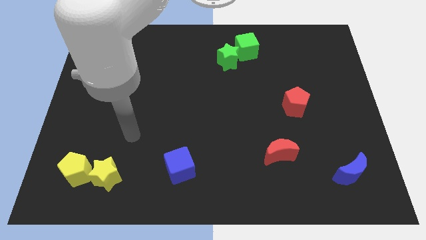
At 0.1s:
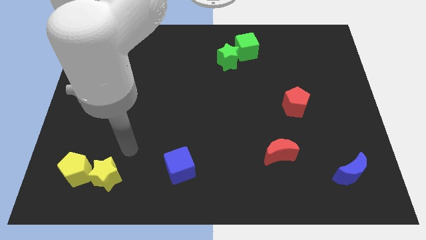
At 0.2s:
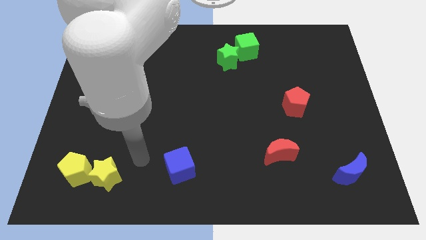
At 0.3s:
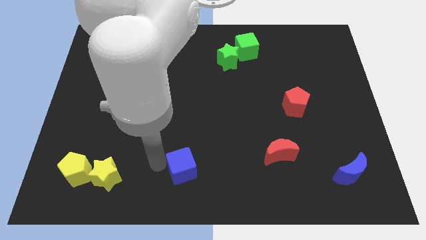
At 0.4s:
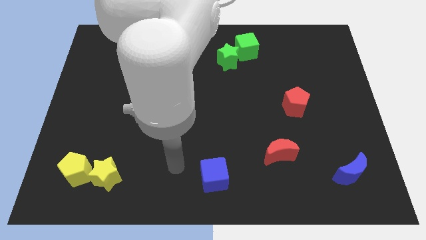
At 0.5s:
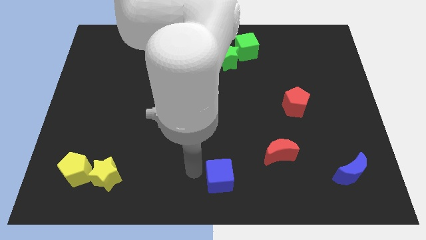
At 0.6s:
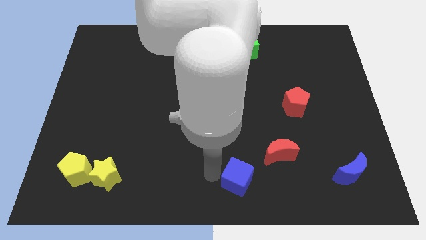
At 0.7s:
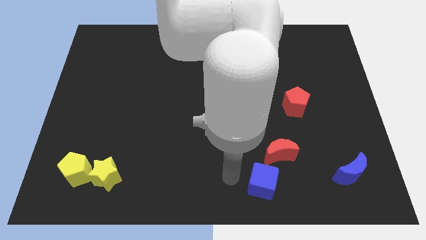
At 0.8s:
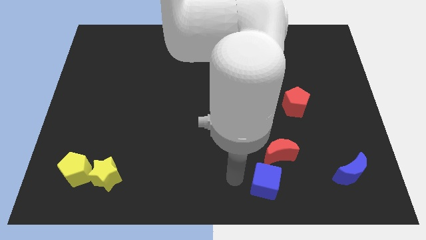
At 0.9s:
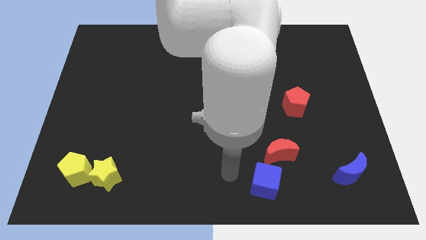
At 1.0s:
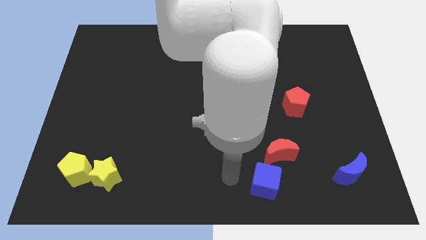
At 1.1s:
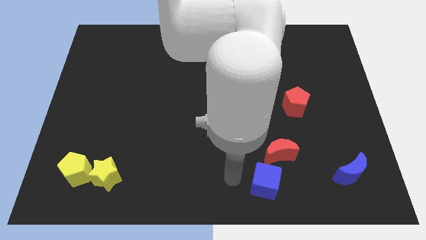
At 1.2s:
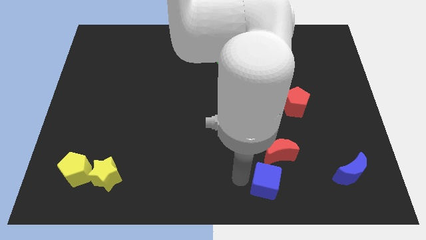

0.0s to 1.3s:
slide the blue cube below the red moon

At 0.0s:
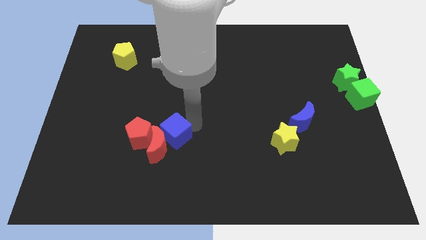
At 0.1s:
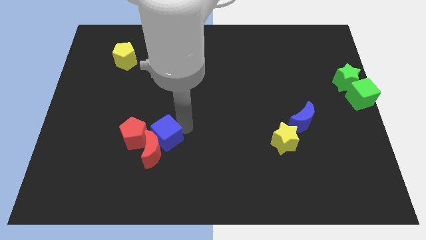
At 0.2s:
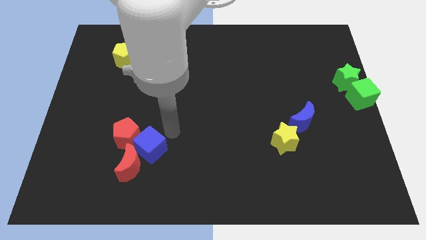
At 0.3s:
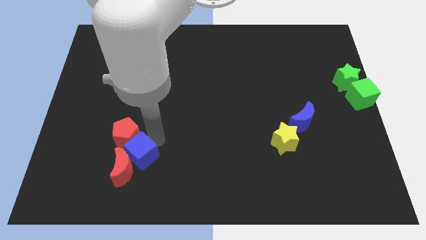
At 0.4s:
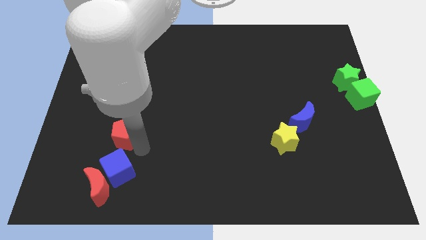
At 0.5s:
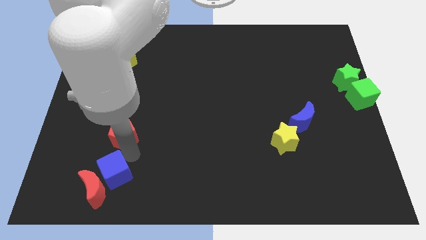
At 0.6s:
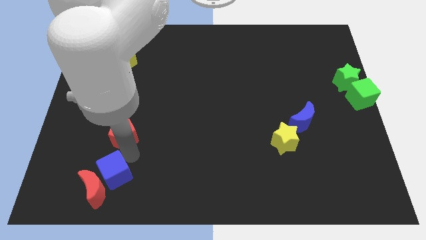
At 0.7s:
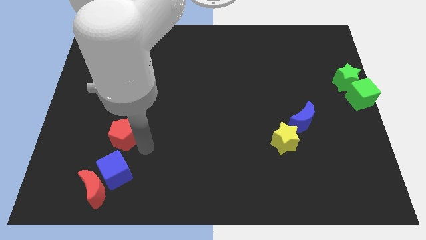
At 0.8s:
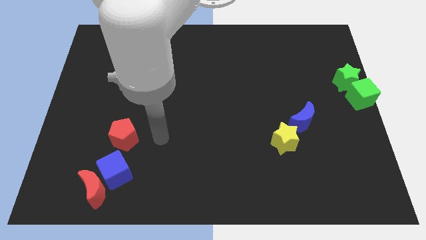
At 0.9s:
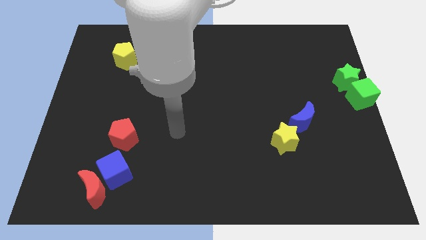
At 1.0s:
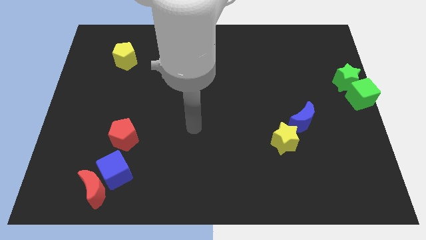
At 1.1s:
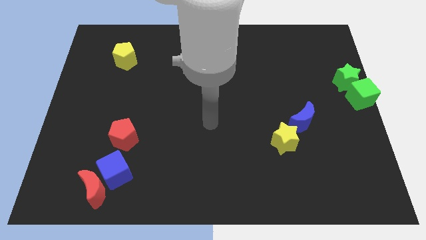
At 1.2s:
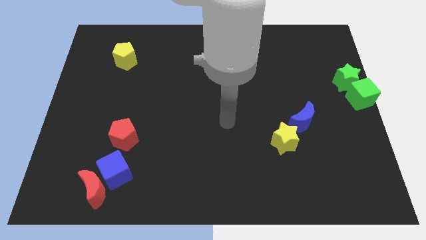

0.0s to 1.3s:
push the red crescent with the blue cube towards the bottom left of the board

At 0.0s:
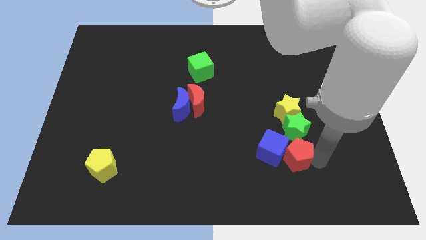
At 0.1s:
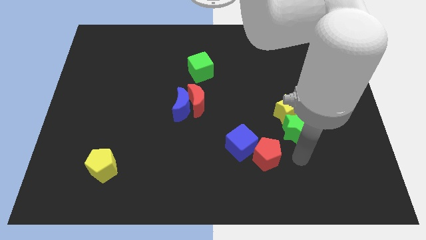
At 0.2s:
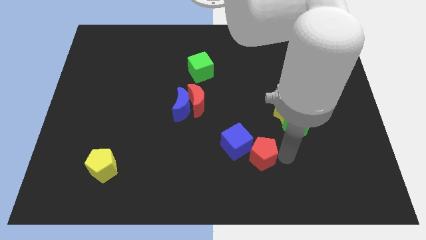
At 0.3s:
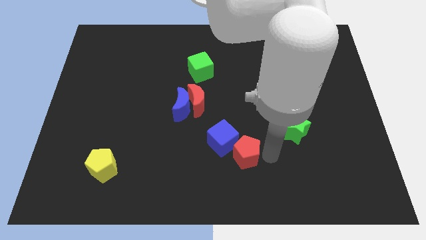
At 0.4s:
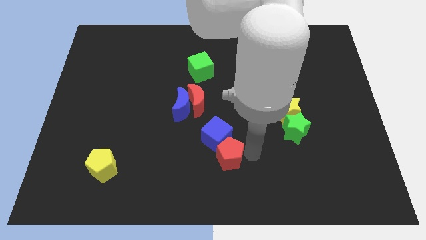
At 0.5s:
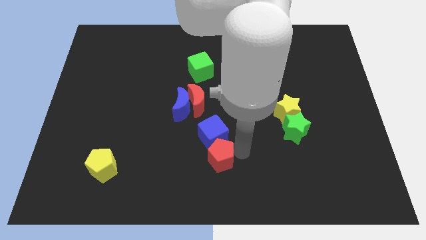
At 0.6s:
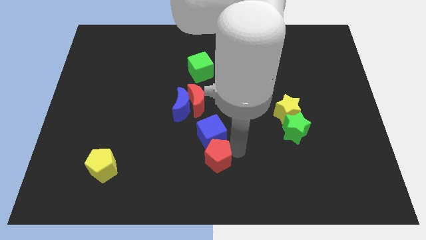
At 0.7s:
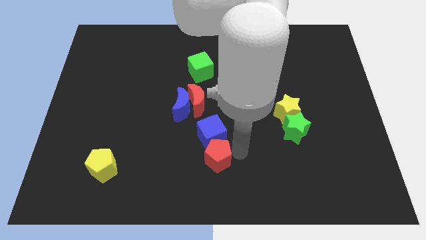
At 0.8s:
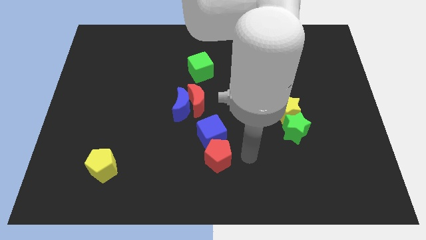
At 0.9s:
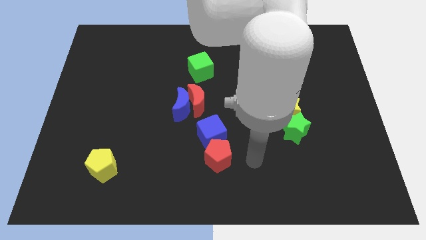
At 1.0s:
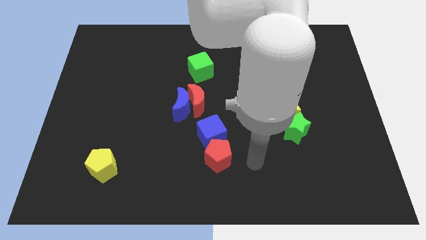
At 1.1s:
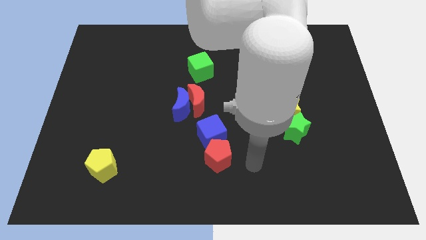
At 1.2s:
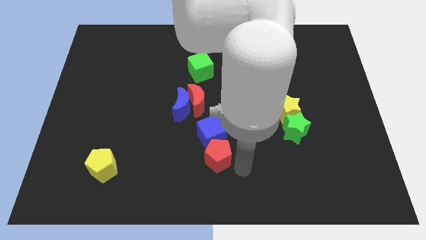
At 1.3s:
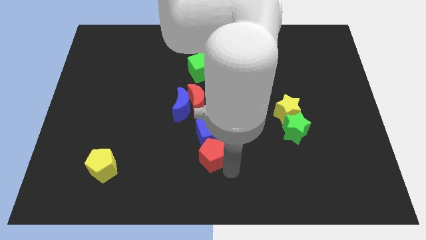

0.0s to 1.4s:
put the red pentagon vertically below the blue cube

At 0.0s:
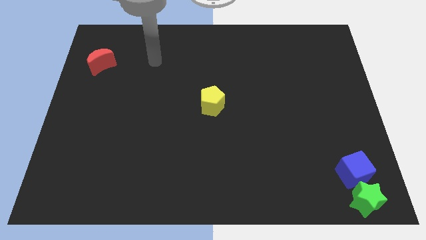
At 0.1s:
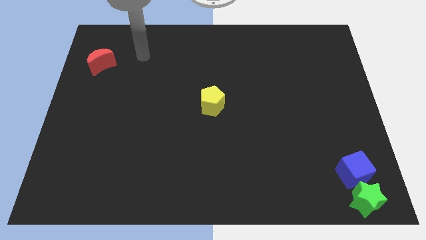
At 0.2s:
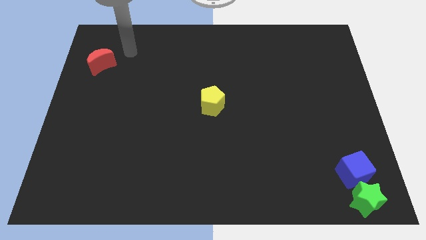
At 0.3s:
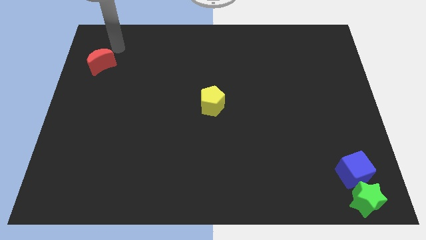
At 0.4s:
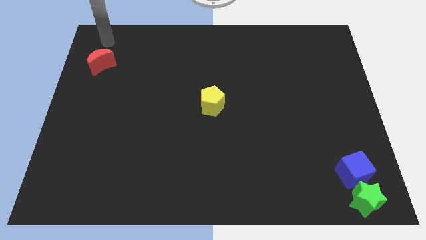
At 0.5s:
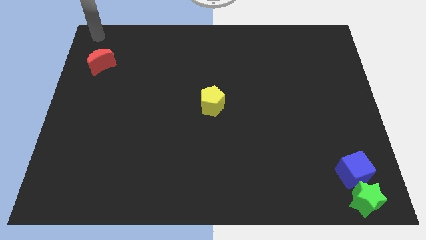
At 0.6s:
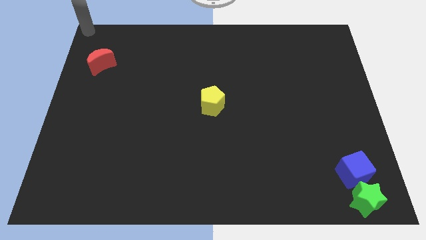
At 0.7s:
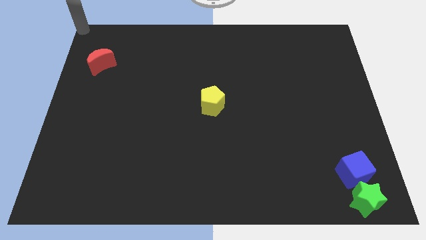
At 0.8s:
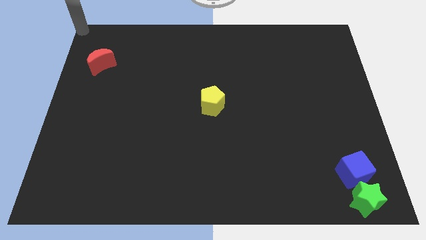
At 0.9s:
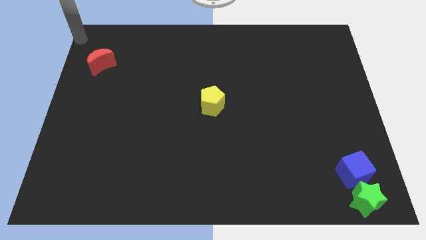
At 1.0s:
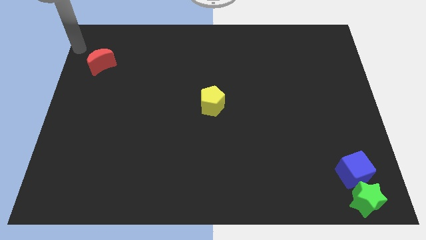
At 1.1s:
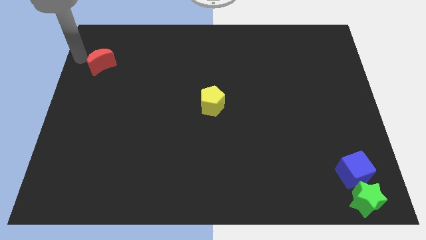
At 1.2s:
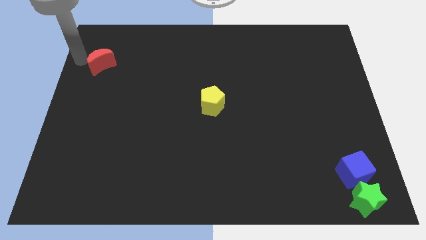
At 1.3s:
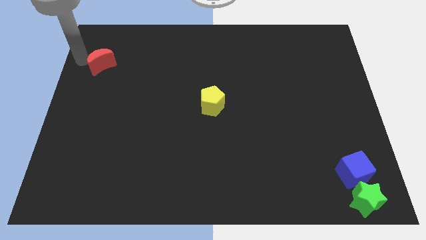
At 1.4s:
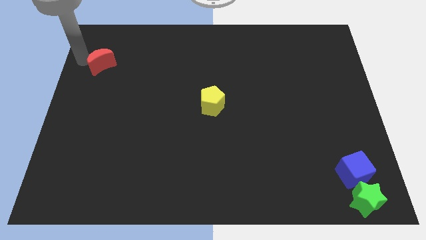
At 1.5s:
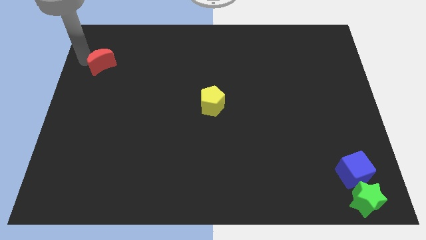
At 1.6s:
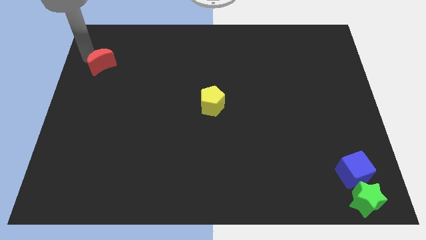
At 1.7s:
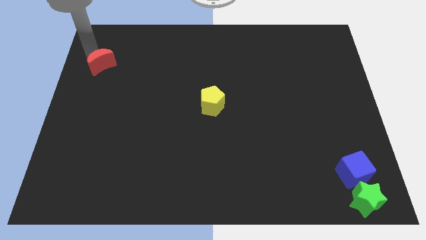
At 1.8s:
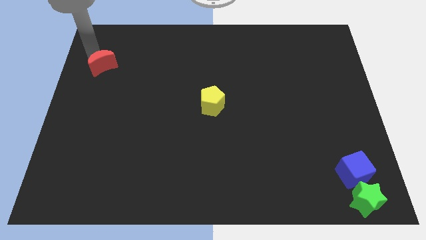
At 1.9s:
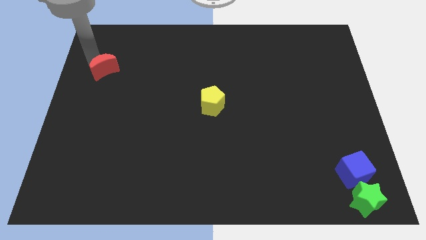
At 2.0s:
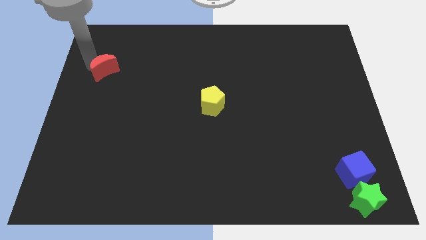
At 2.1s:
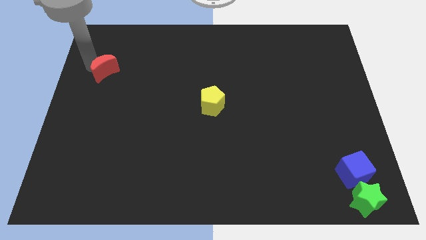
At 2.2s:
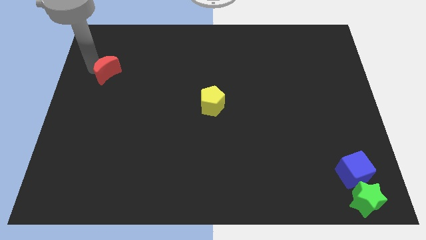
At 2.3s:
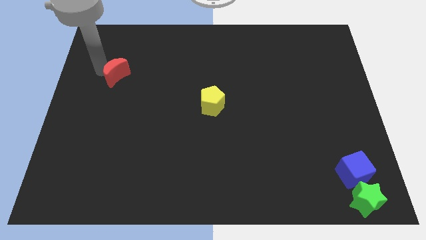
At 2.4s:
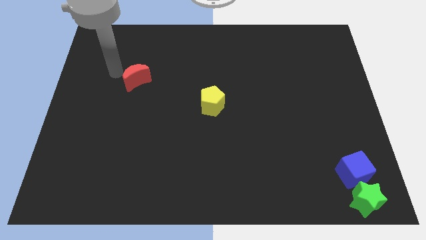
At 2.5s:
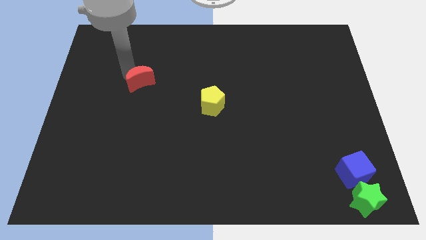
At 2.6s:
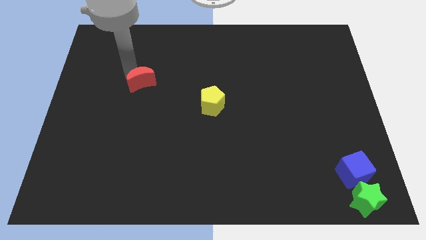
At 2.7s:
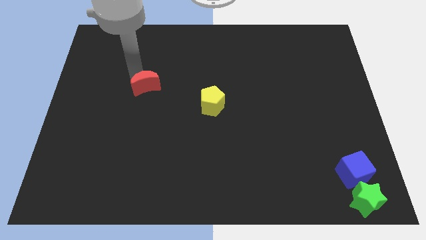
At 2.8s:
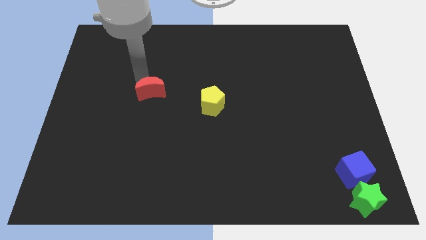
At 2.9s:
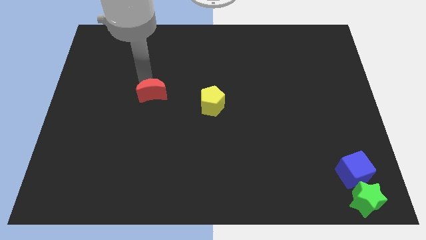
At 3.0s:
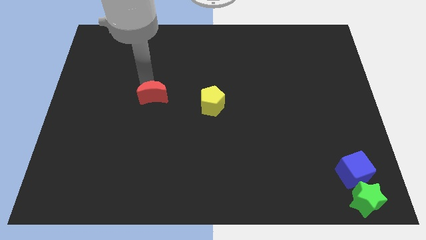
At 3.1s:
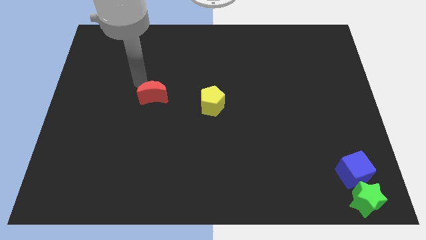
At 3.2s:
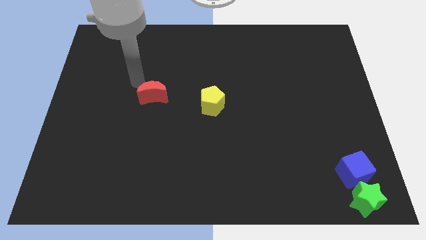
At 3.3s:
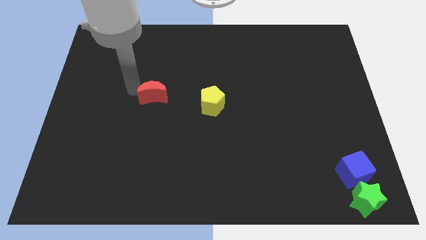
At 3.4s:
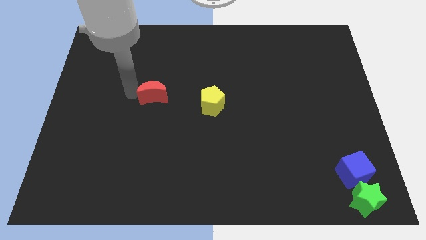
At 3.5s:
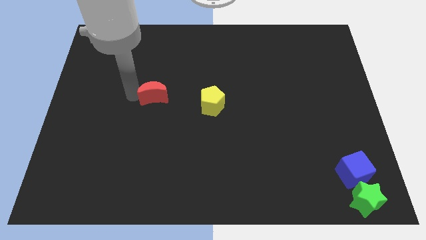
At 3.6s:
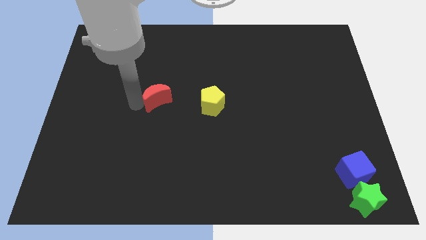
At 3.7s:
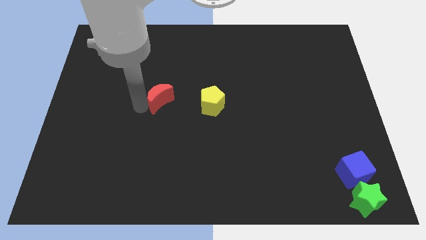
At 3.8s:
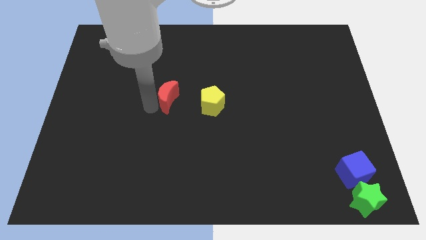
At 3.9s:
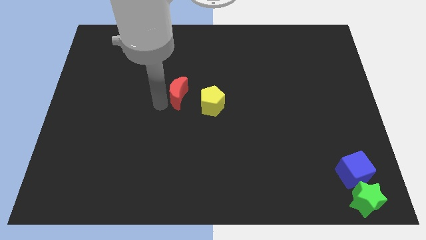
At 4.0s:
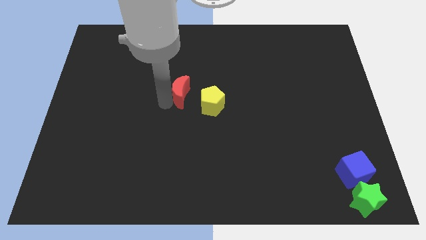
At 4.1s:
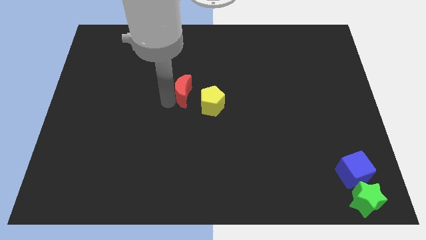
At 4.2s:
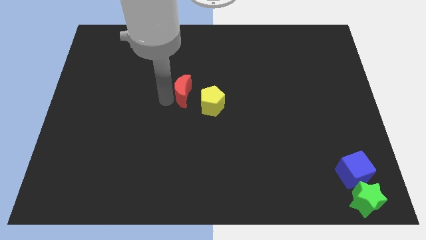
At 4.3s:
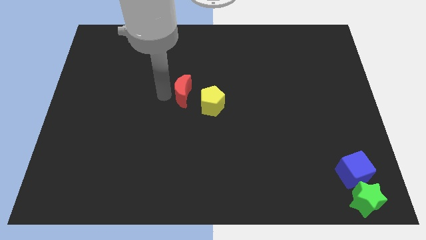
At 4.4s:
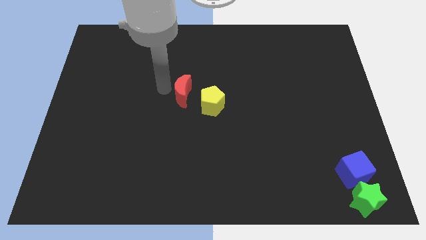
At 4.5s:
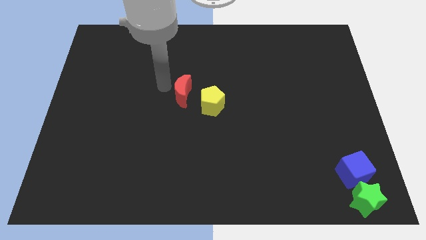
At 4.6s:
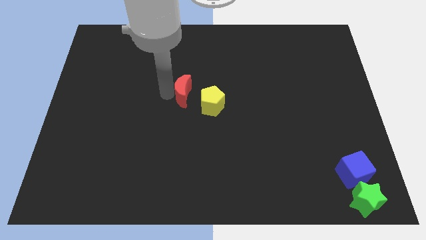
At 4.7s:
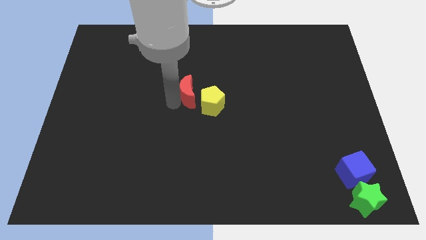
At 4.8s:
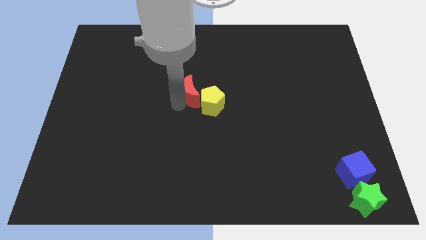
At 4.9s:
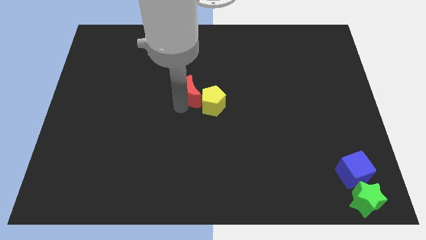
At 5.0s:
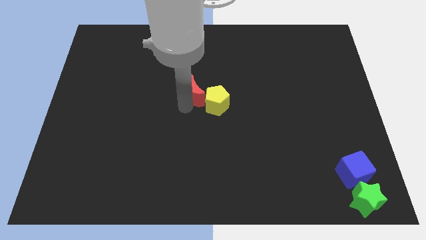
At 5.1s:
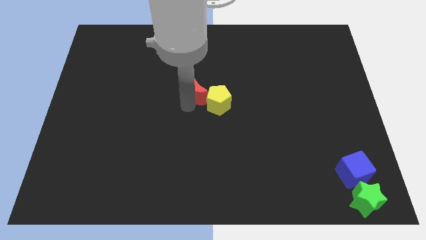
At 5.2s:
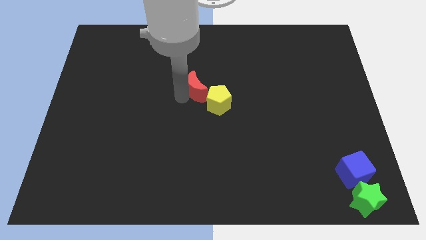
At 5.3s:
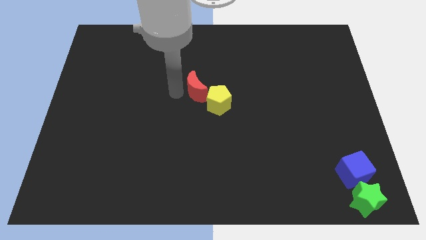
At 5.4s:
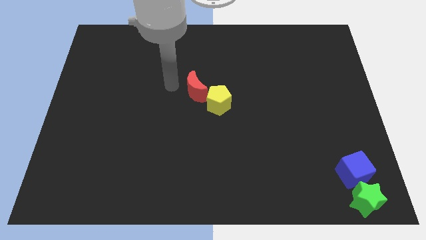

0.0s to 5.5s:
place red moon to the center of the board
